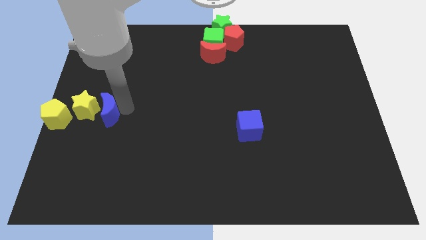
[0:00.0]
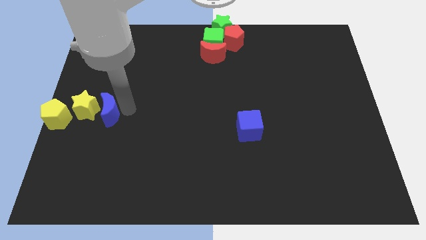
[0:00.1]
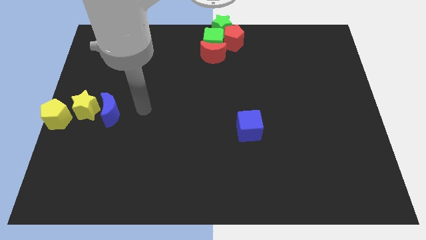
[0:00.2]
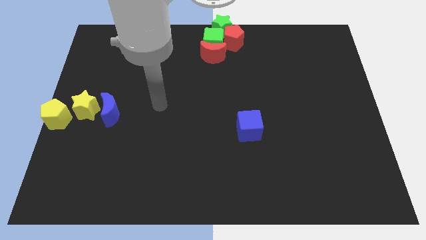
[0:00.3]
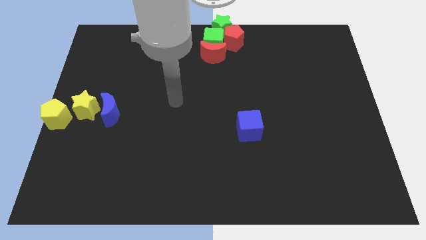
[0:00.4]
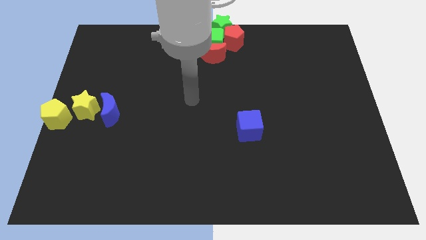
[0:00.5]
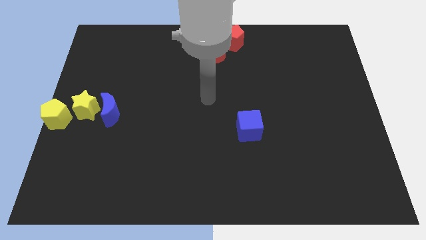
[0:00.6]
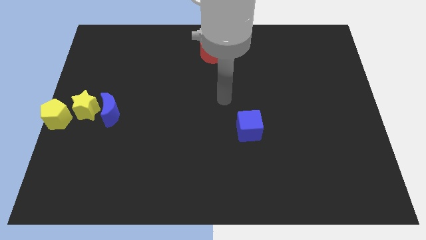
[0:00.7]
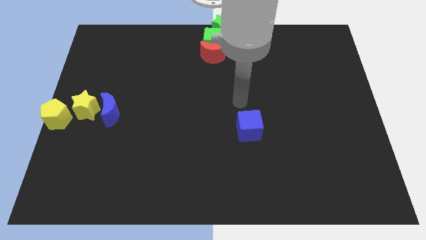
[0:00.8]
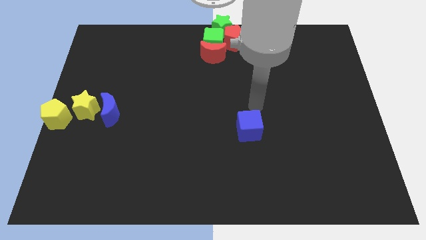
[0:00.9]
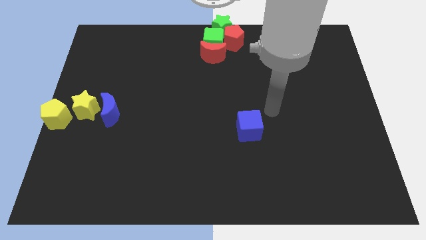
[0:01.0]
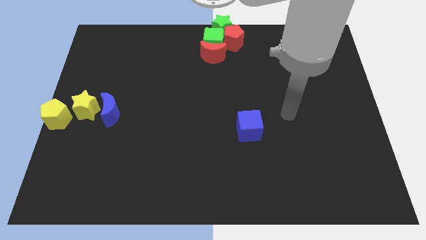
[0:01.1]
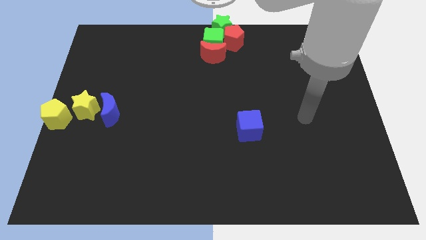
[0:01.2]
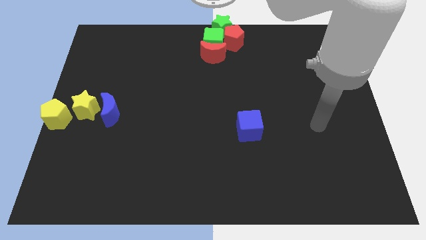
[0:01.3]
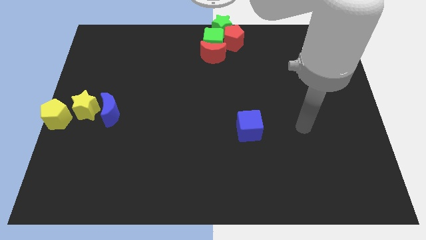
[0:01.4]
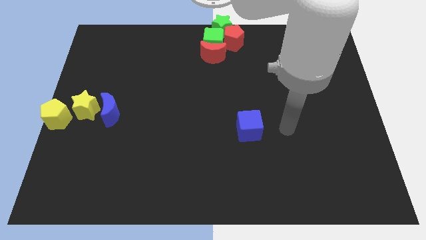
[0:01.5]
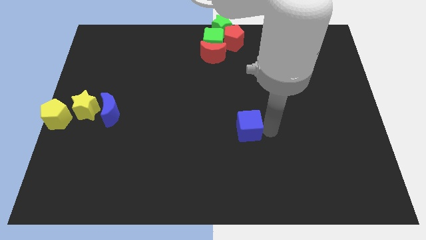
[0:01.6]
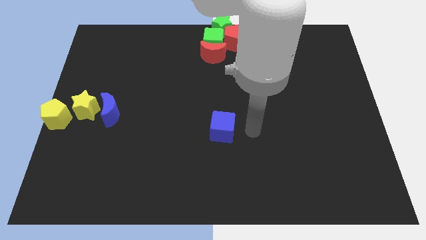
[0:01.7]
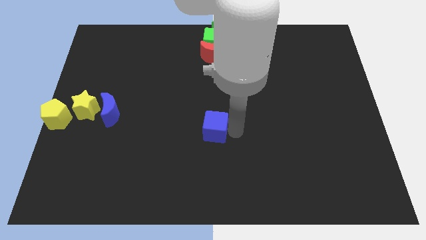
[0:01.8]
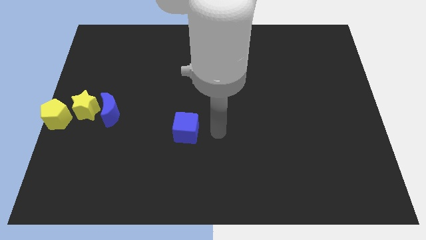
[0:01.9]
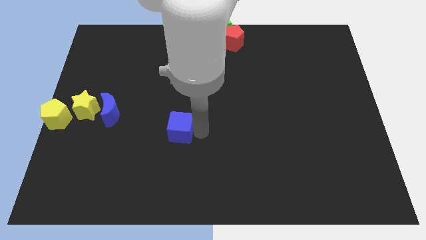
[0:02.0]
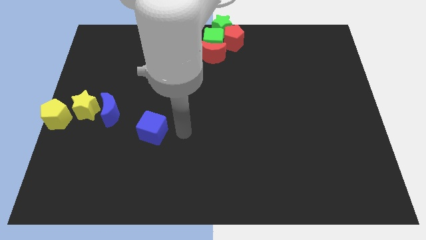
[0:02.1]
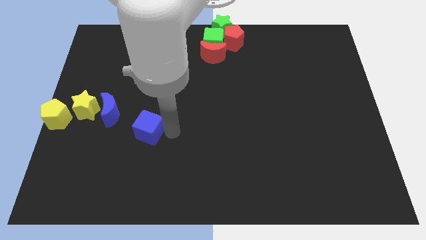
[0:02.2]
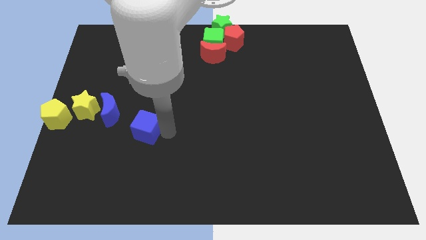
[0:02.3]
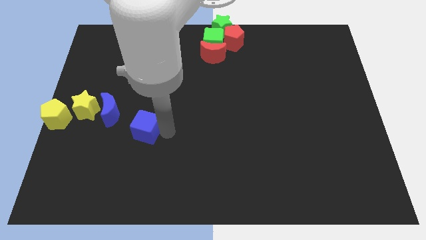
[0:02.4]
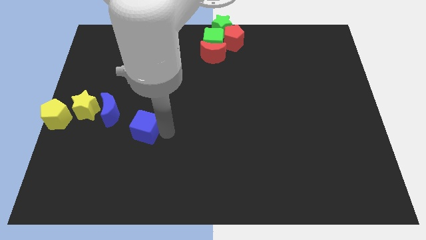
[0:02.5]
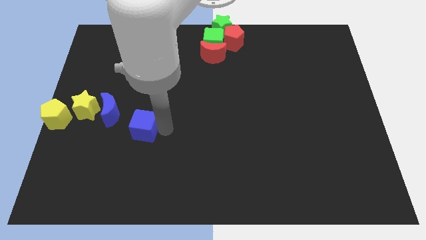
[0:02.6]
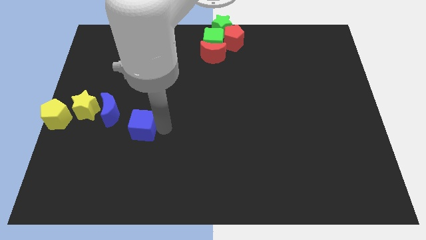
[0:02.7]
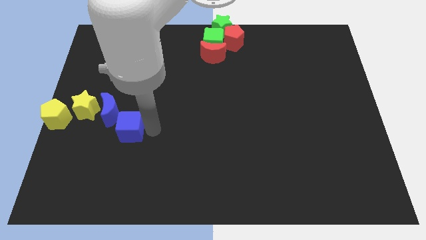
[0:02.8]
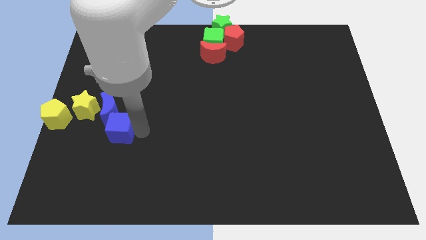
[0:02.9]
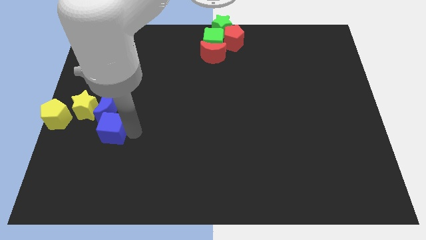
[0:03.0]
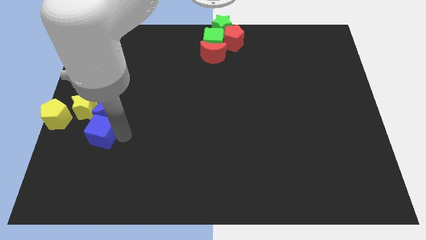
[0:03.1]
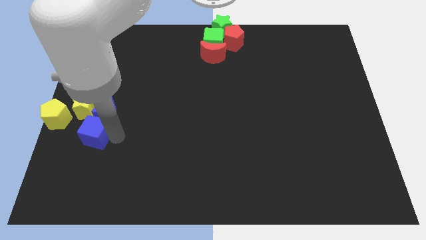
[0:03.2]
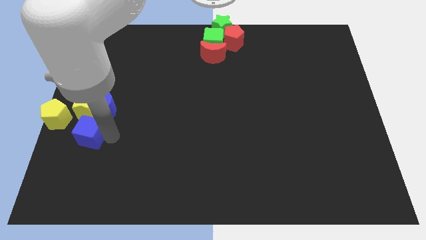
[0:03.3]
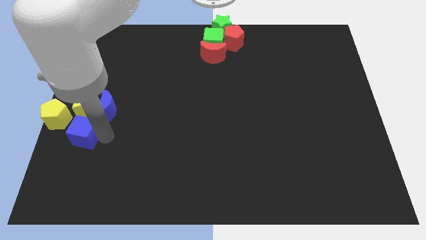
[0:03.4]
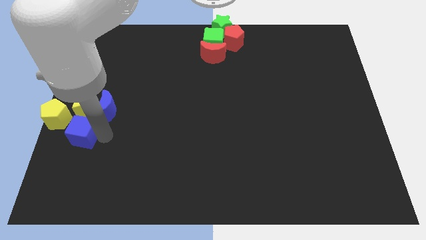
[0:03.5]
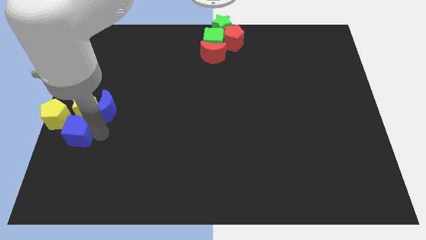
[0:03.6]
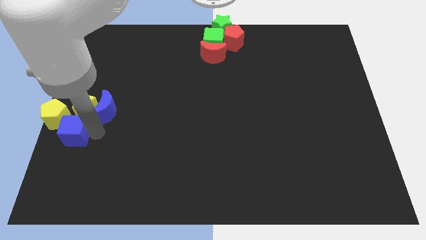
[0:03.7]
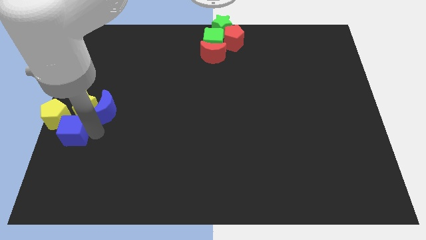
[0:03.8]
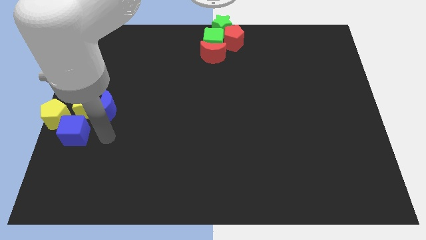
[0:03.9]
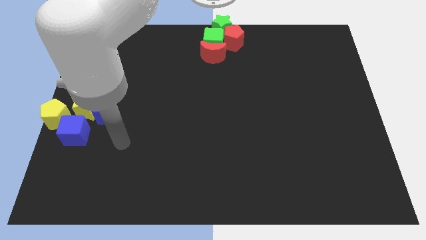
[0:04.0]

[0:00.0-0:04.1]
move blue cube to the bottom of yellow star

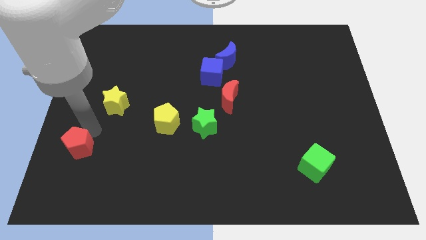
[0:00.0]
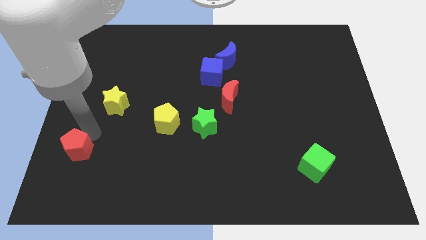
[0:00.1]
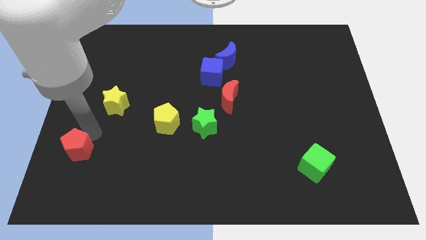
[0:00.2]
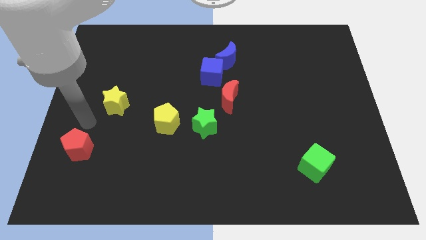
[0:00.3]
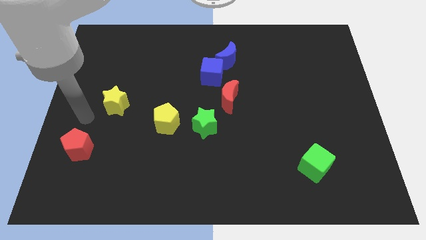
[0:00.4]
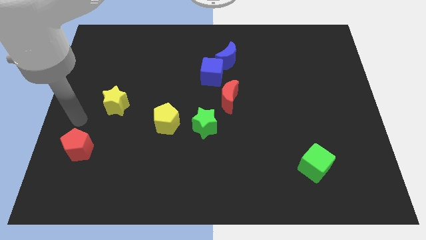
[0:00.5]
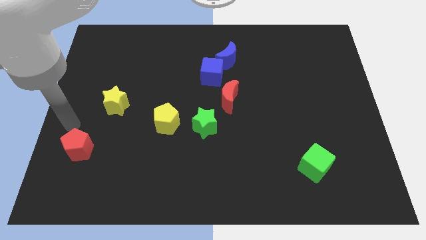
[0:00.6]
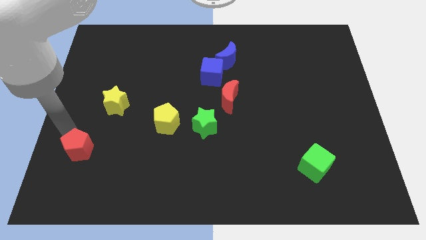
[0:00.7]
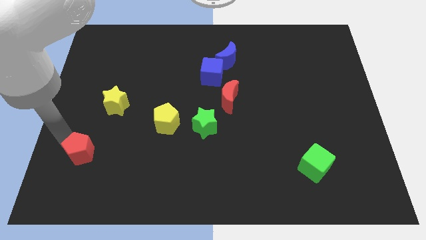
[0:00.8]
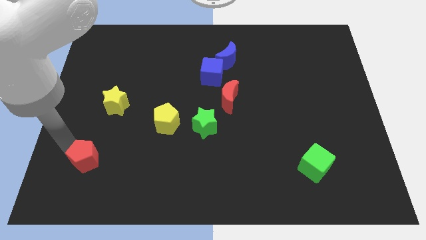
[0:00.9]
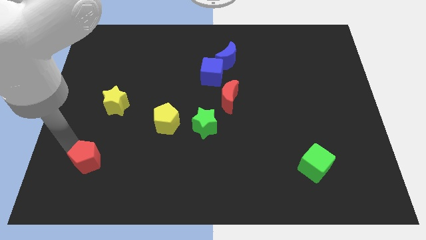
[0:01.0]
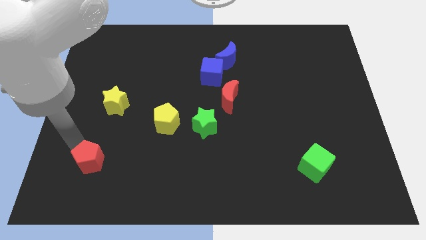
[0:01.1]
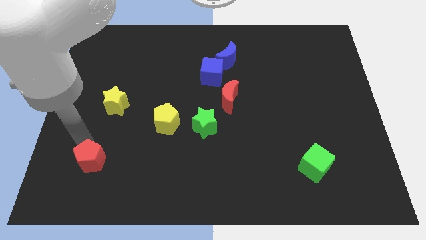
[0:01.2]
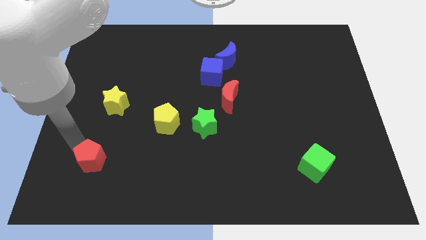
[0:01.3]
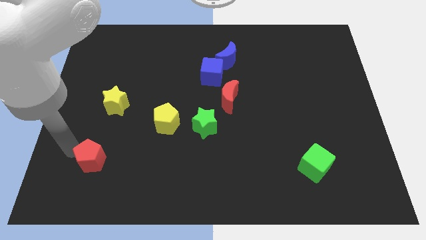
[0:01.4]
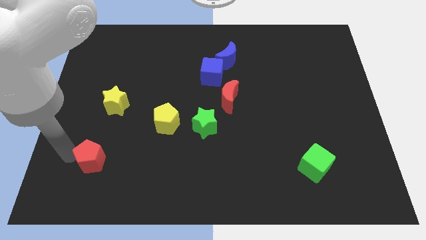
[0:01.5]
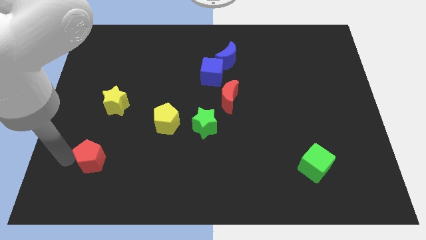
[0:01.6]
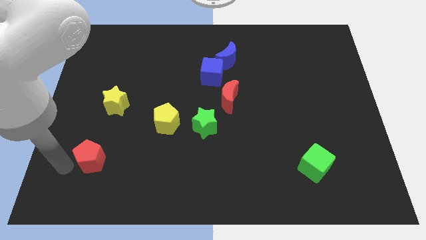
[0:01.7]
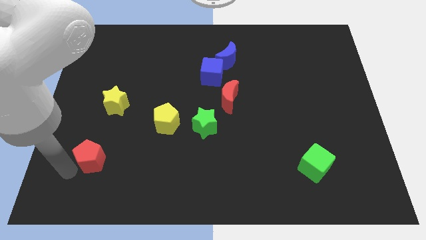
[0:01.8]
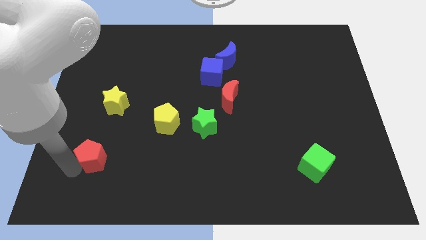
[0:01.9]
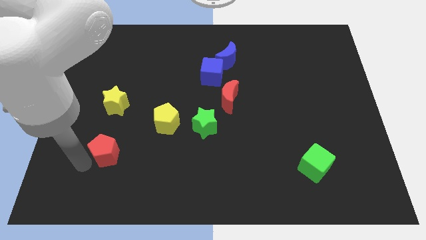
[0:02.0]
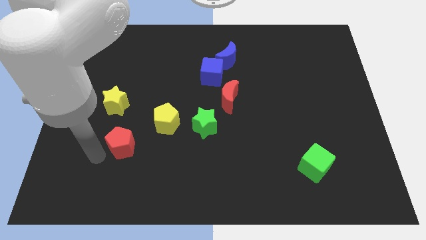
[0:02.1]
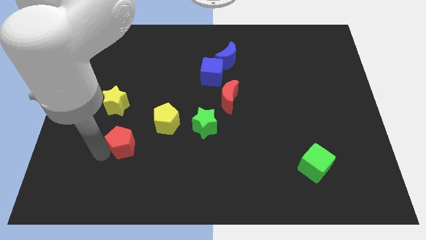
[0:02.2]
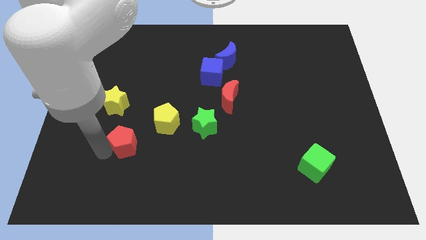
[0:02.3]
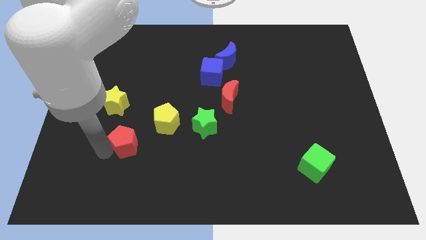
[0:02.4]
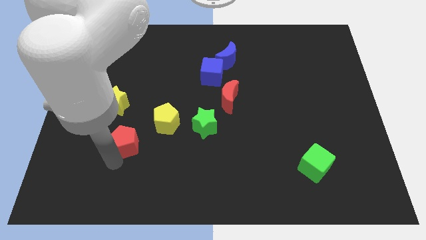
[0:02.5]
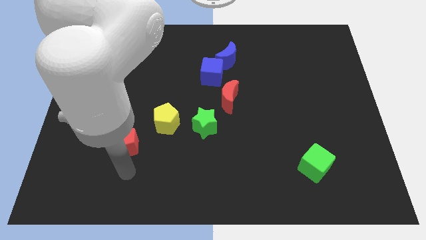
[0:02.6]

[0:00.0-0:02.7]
move the red pentagon in a triangle with yellow pentagon and yellow star

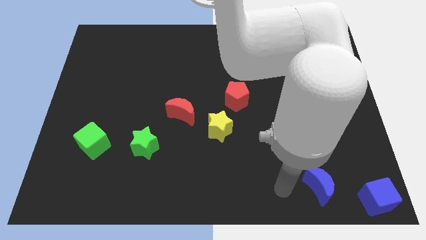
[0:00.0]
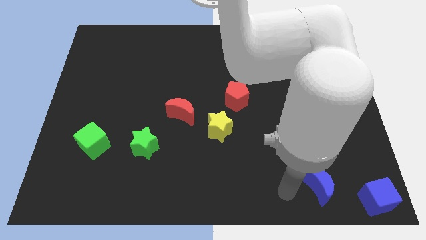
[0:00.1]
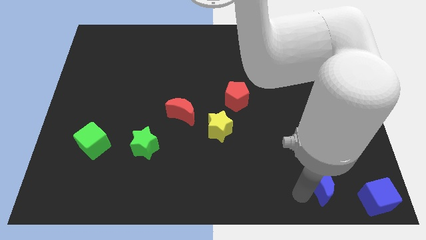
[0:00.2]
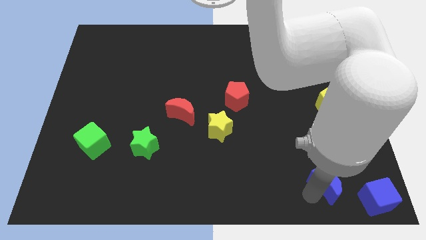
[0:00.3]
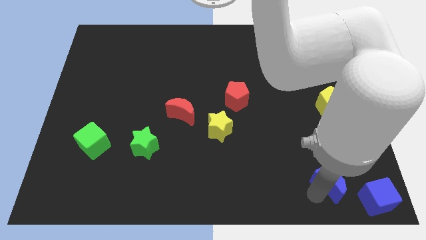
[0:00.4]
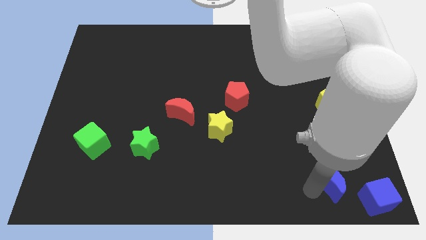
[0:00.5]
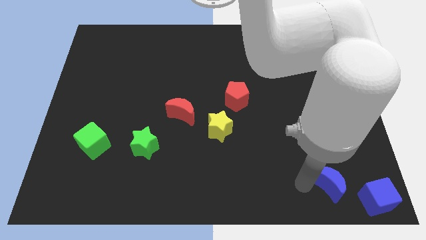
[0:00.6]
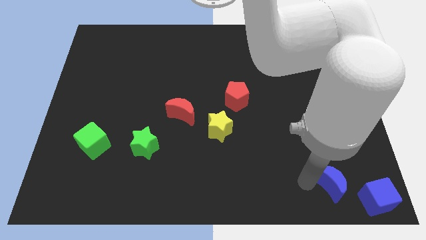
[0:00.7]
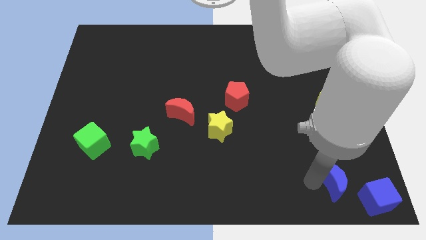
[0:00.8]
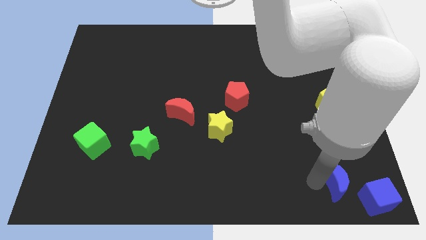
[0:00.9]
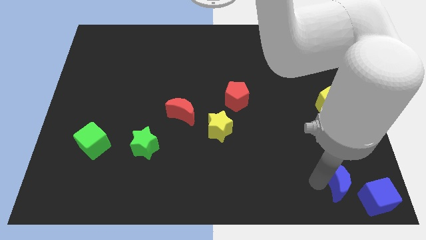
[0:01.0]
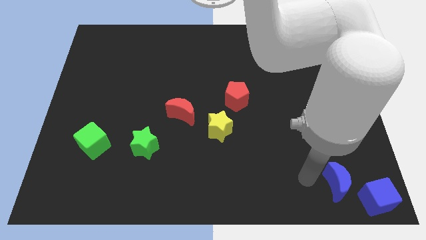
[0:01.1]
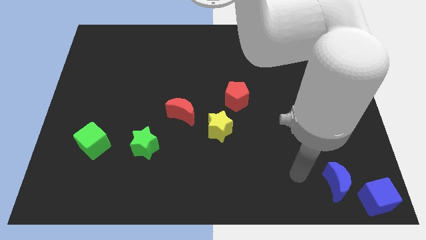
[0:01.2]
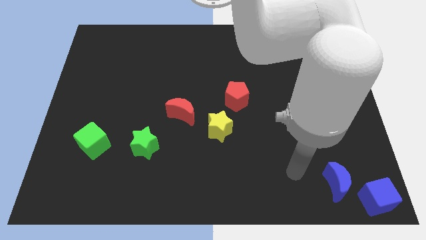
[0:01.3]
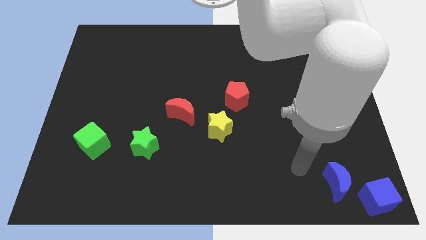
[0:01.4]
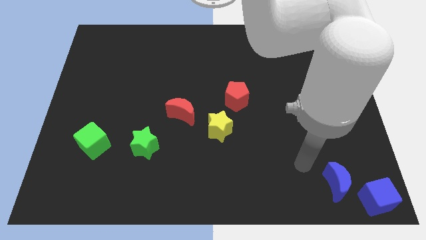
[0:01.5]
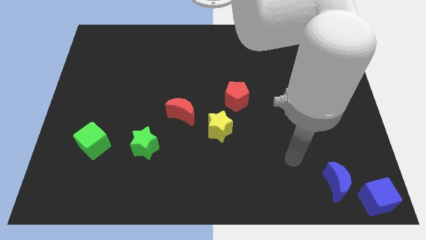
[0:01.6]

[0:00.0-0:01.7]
move the blue moon diagonally top left to blue cube

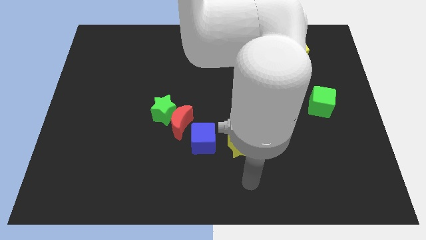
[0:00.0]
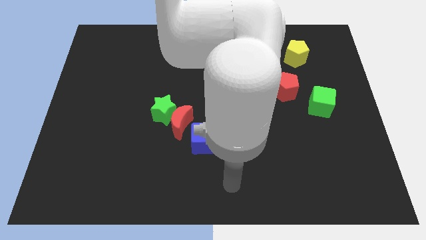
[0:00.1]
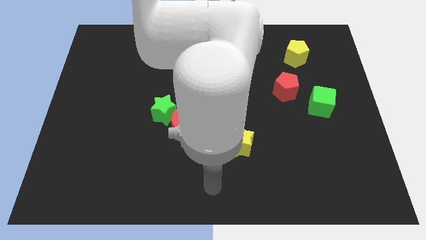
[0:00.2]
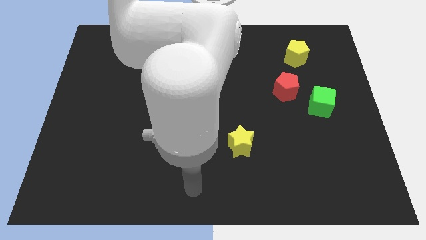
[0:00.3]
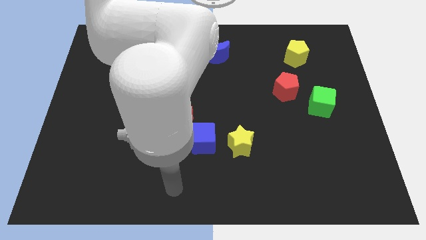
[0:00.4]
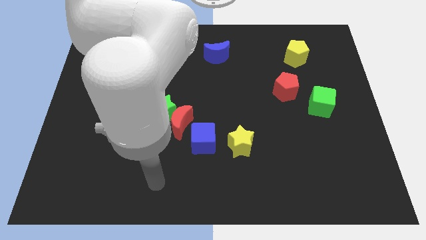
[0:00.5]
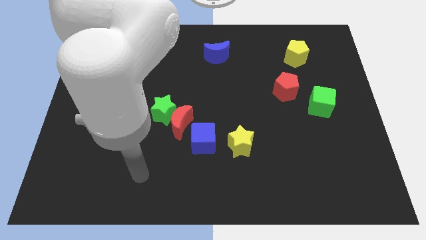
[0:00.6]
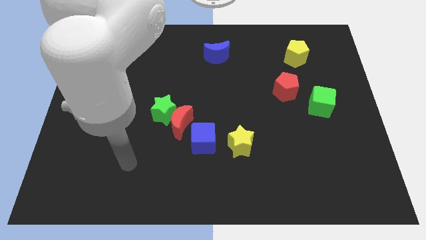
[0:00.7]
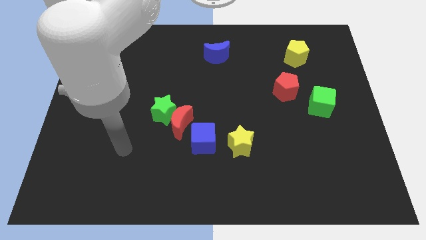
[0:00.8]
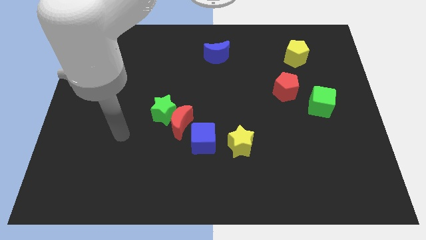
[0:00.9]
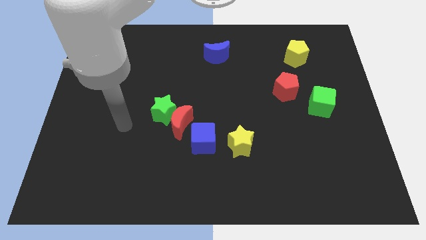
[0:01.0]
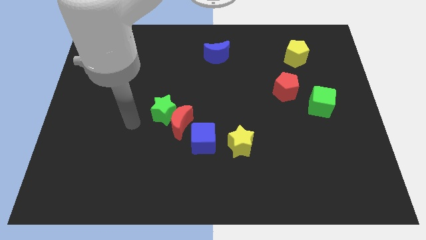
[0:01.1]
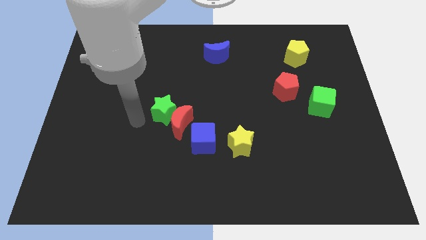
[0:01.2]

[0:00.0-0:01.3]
move arm to the left of green star
